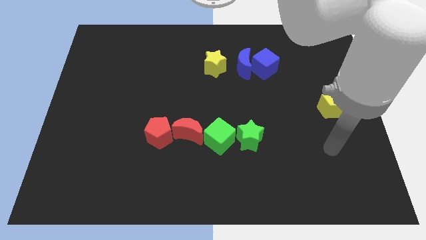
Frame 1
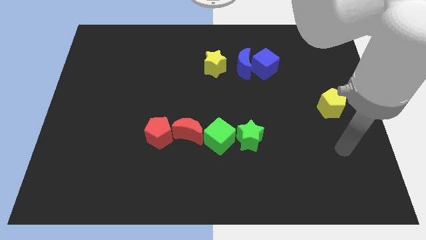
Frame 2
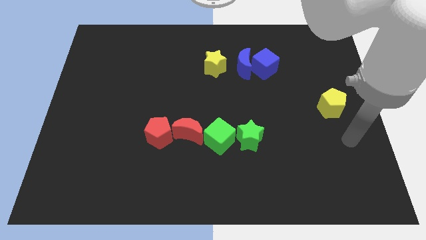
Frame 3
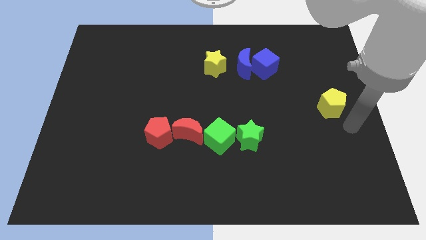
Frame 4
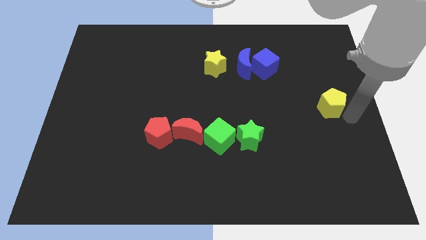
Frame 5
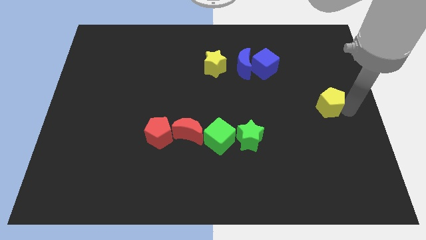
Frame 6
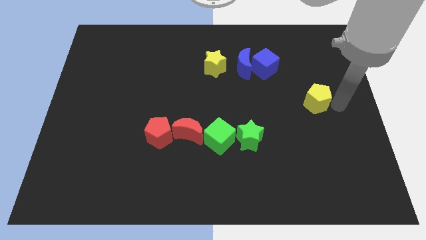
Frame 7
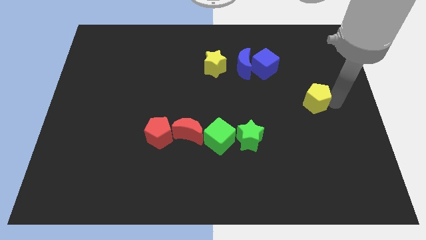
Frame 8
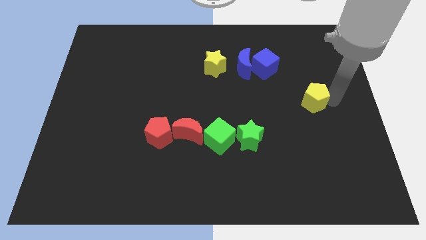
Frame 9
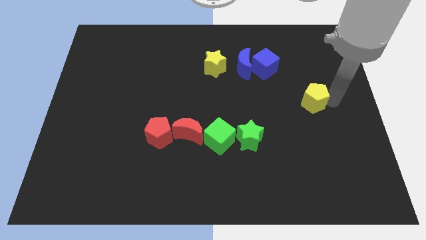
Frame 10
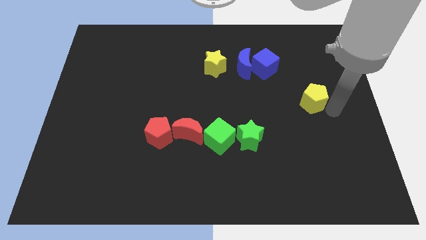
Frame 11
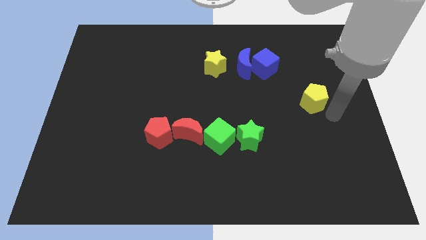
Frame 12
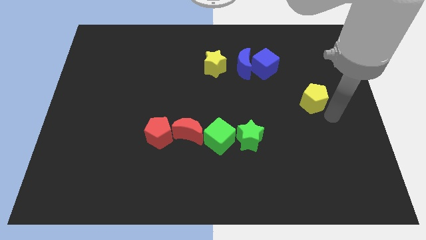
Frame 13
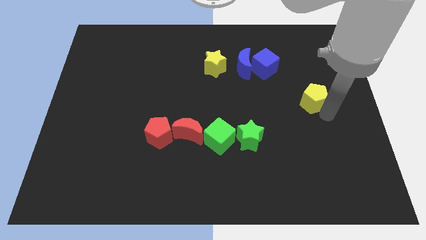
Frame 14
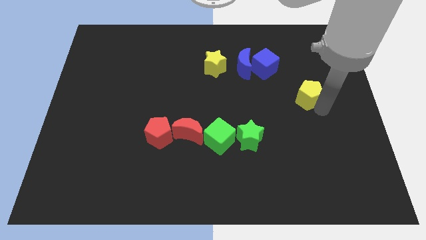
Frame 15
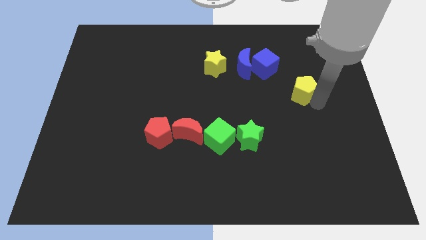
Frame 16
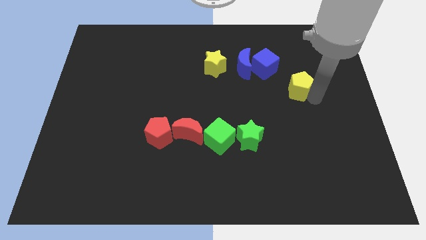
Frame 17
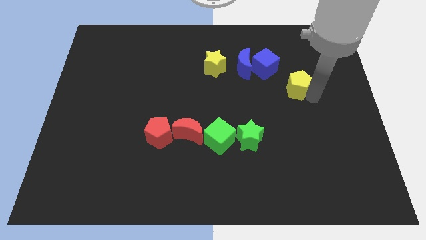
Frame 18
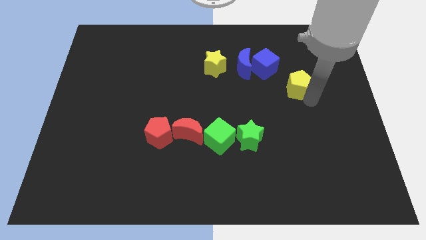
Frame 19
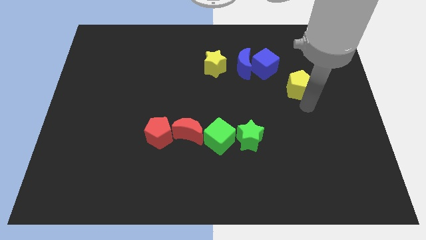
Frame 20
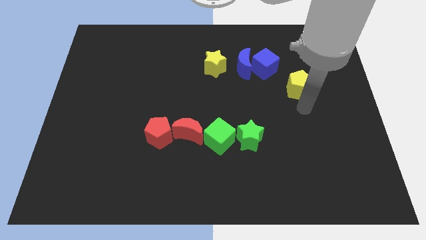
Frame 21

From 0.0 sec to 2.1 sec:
push the yellow pentagon towards top right

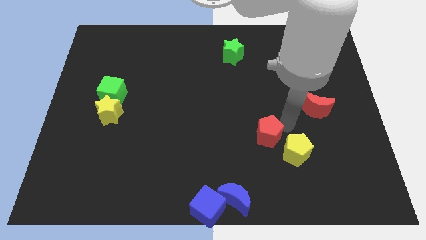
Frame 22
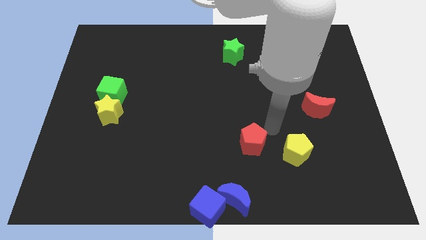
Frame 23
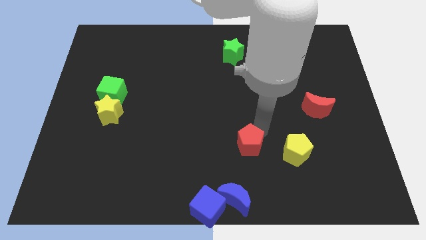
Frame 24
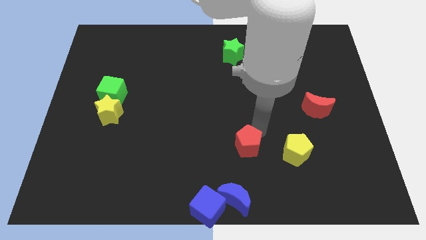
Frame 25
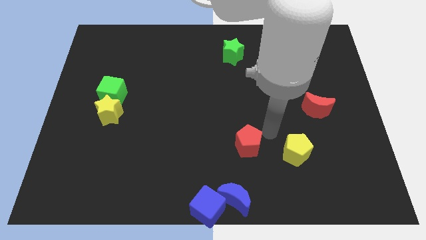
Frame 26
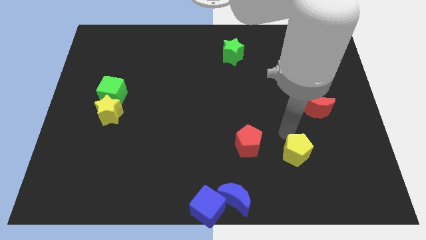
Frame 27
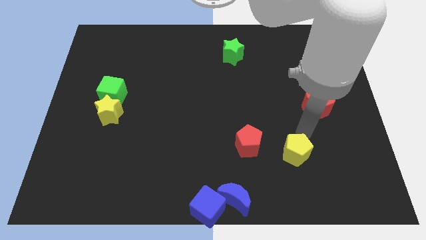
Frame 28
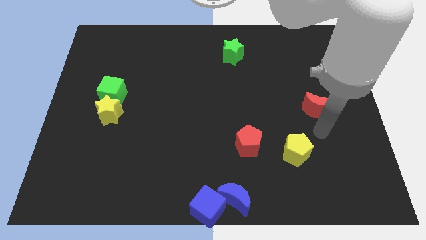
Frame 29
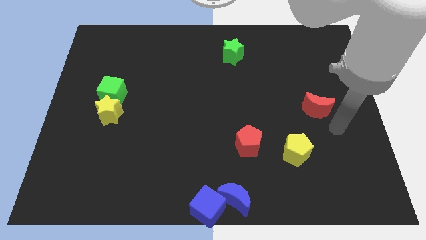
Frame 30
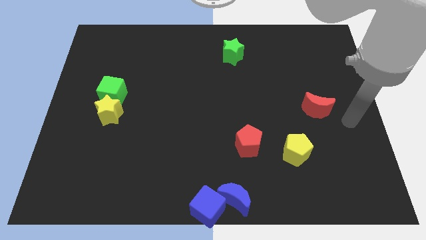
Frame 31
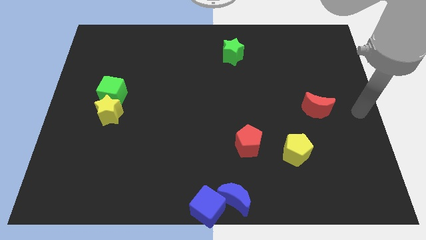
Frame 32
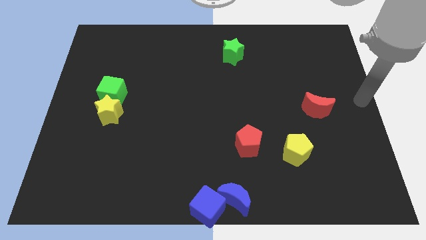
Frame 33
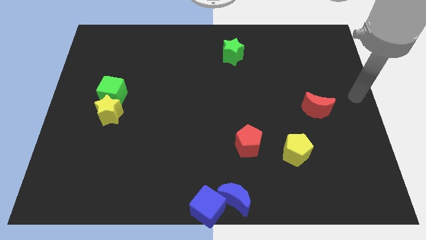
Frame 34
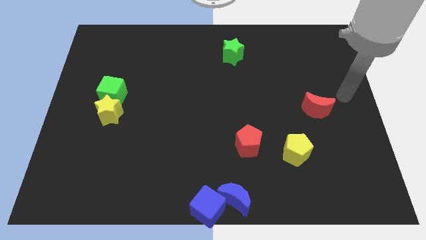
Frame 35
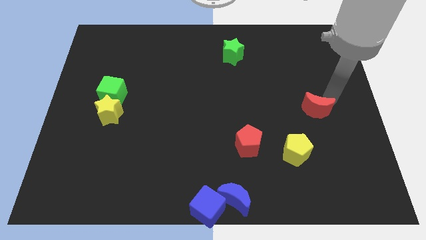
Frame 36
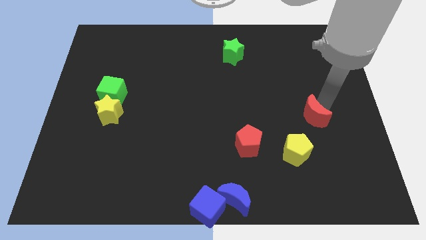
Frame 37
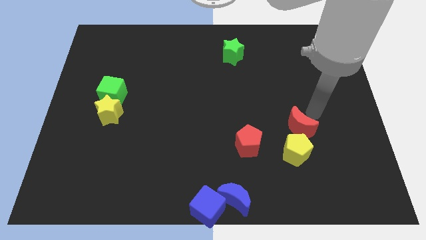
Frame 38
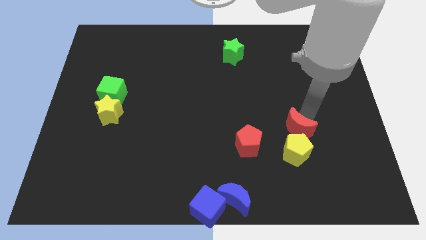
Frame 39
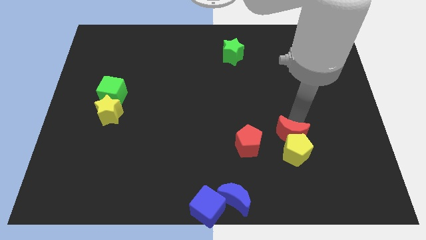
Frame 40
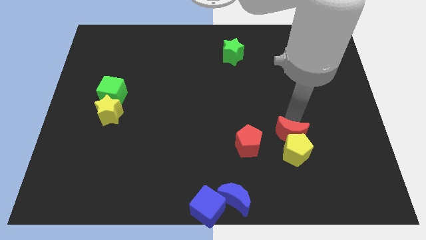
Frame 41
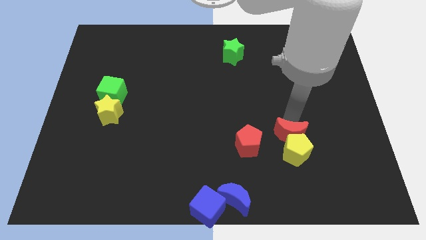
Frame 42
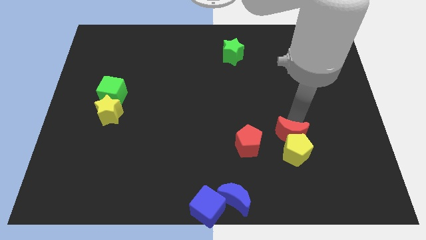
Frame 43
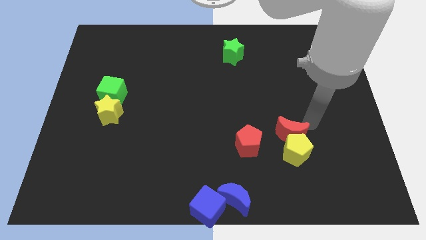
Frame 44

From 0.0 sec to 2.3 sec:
push the red moon into the yellow pentagon

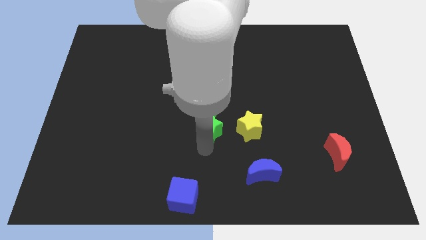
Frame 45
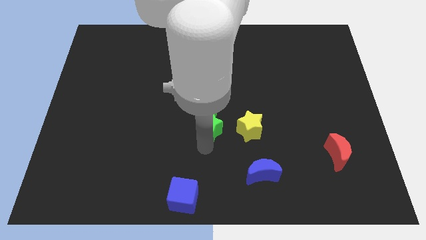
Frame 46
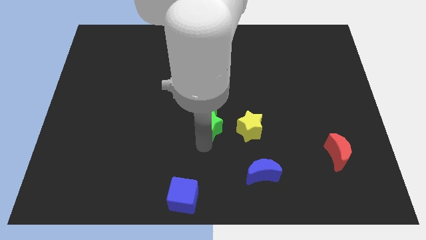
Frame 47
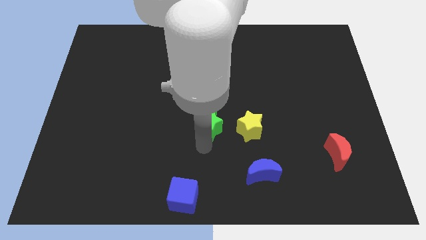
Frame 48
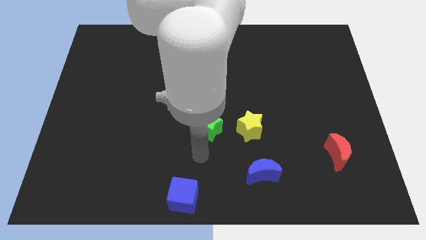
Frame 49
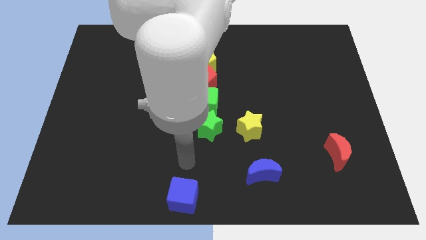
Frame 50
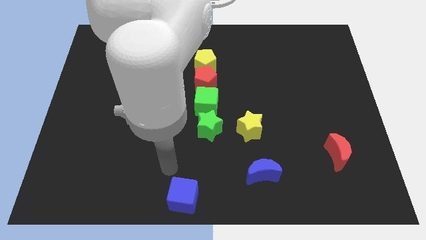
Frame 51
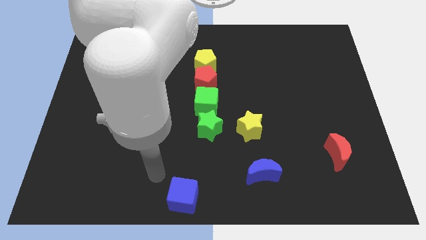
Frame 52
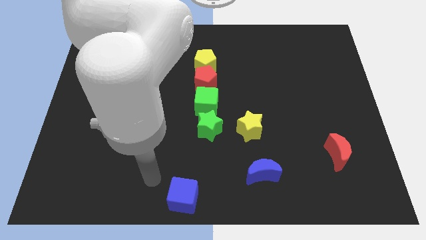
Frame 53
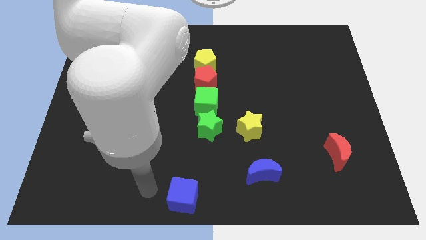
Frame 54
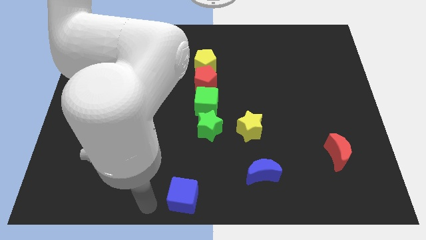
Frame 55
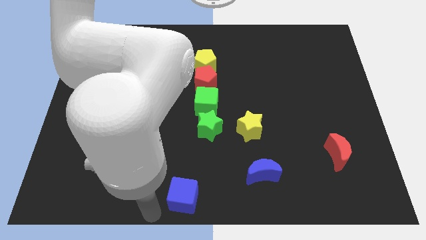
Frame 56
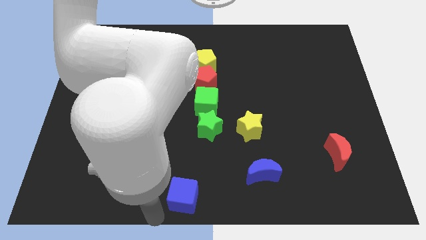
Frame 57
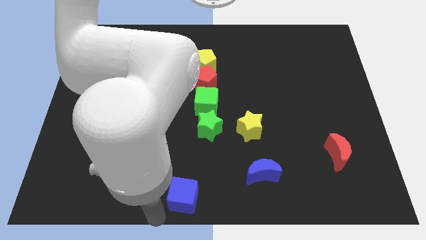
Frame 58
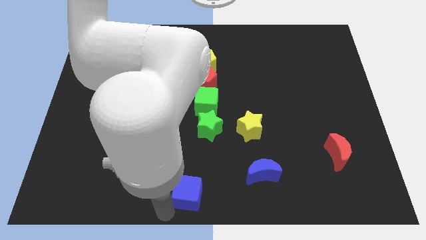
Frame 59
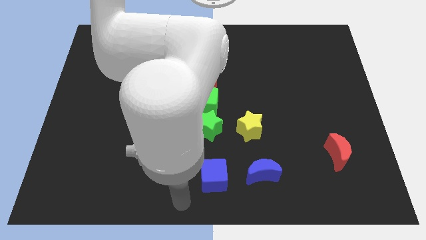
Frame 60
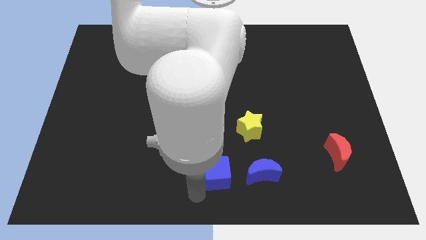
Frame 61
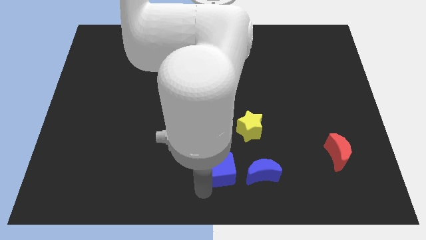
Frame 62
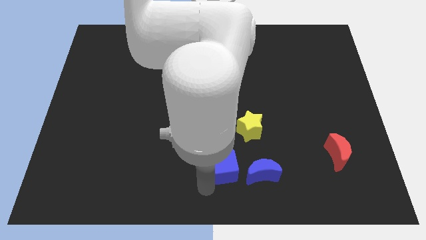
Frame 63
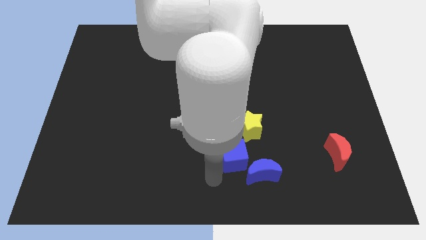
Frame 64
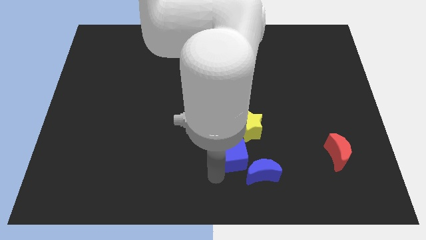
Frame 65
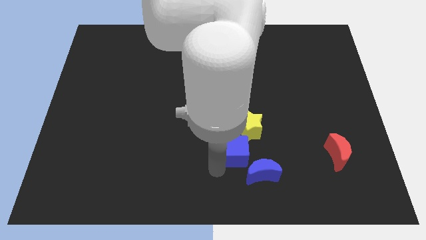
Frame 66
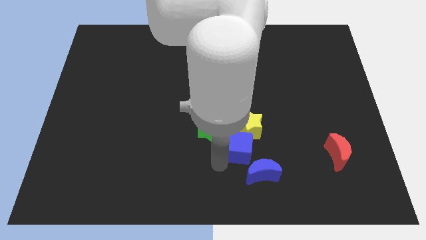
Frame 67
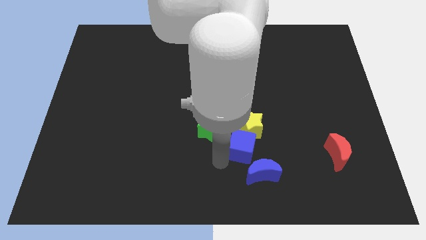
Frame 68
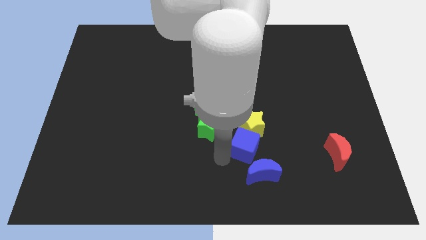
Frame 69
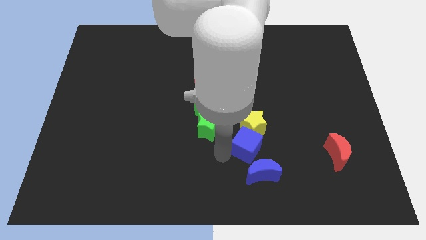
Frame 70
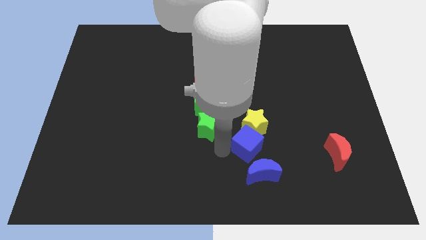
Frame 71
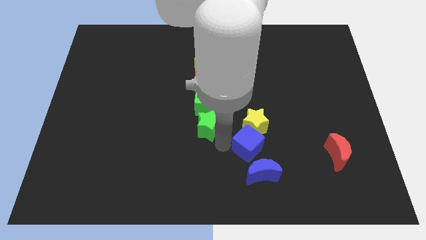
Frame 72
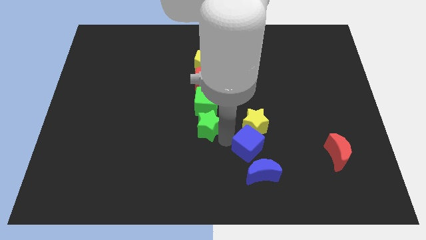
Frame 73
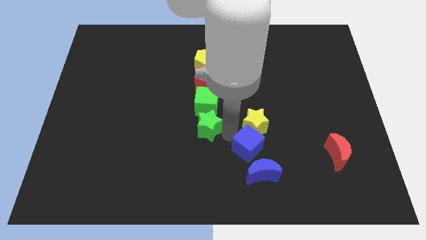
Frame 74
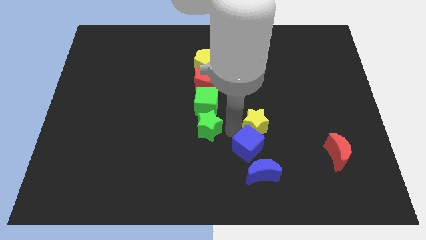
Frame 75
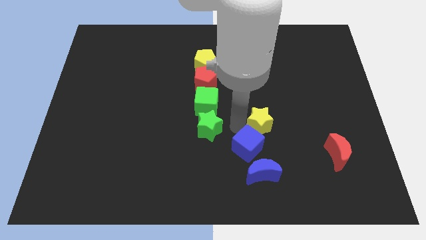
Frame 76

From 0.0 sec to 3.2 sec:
slide the blue cube into the yellow star

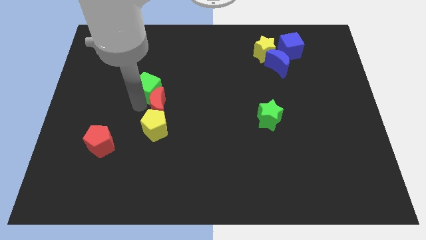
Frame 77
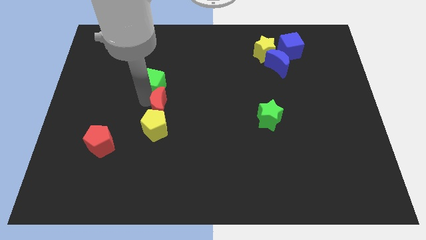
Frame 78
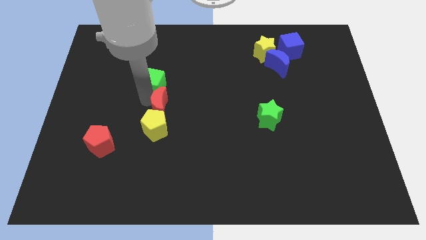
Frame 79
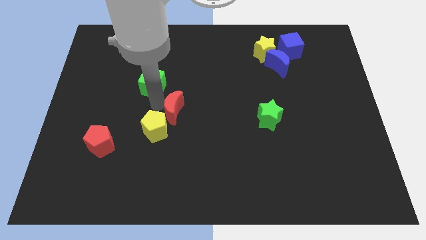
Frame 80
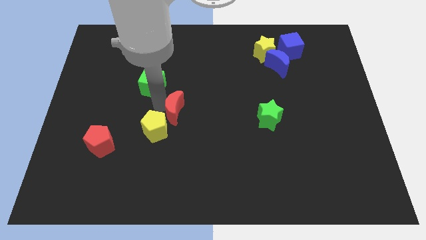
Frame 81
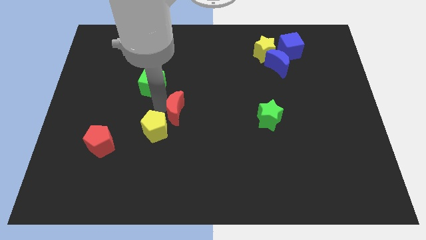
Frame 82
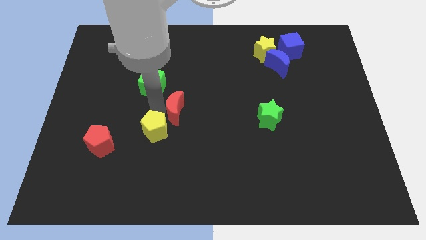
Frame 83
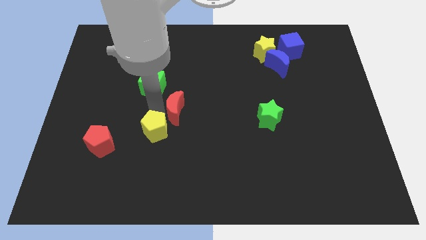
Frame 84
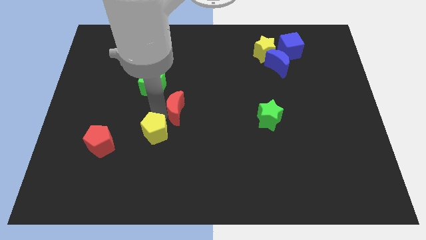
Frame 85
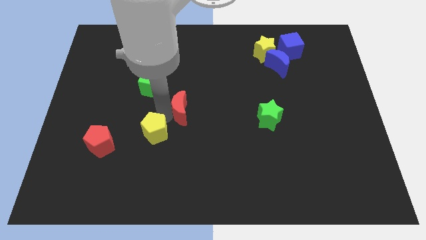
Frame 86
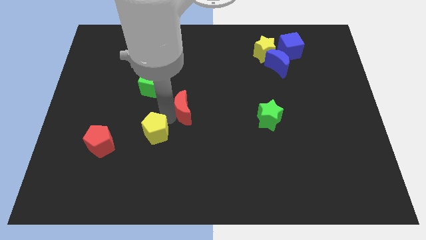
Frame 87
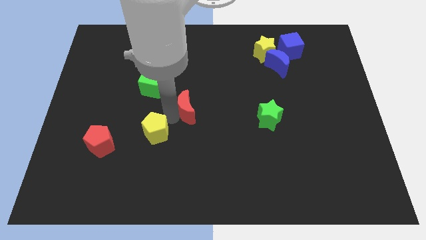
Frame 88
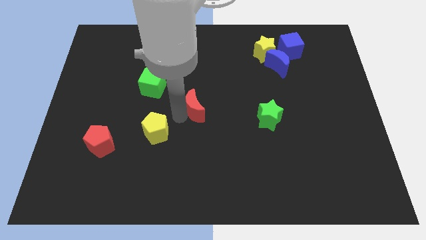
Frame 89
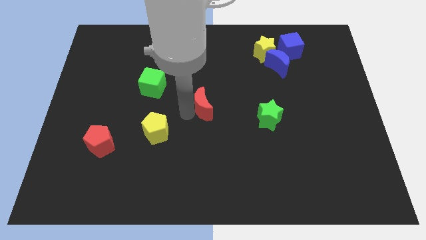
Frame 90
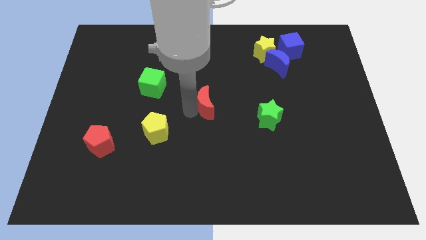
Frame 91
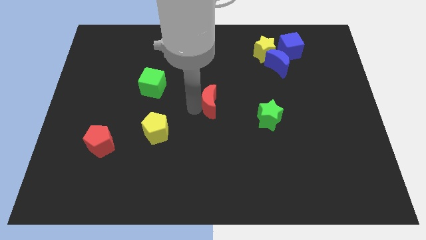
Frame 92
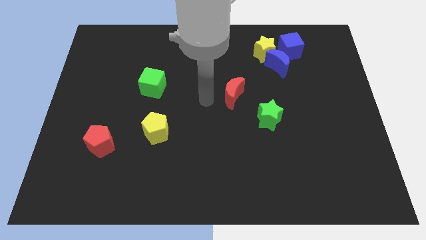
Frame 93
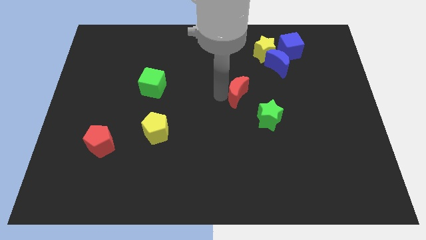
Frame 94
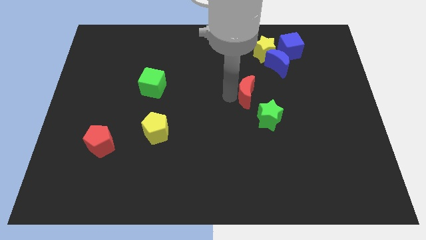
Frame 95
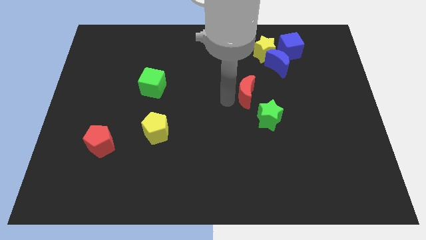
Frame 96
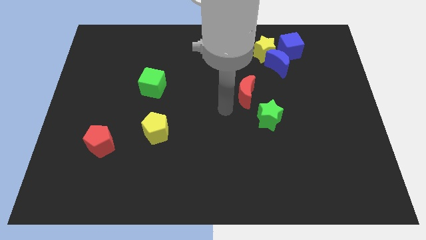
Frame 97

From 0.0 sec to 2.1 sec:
slide the red crescent slightly to the right
